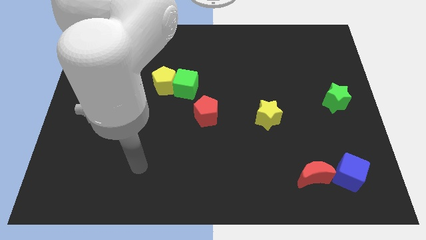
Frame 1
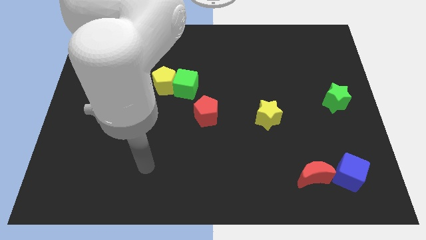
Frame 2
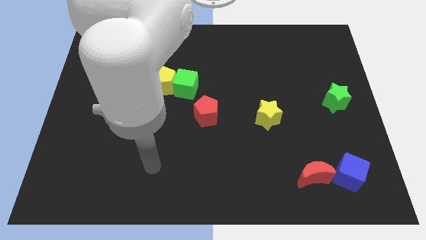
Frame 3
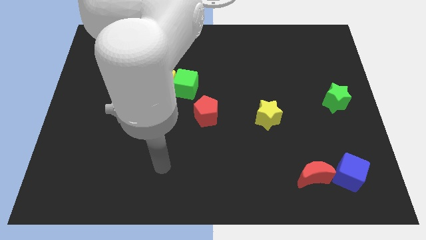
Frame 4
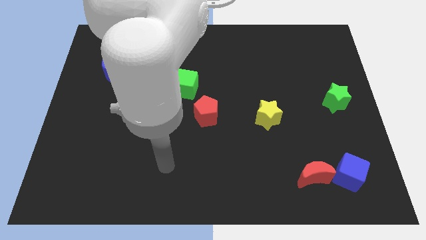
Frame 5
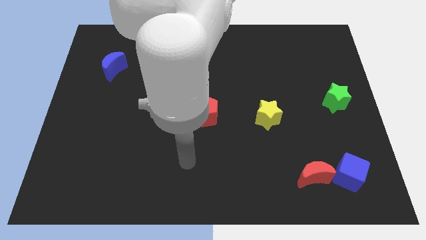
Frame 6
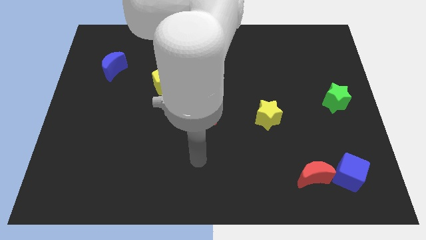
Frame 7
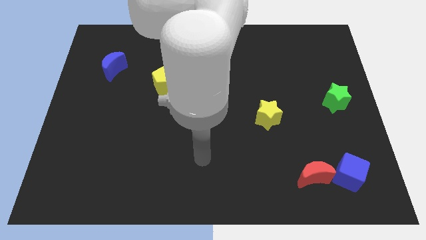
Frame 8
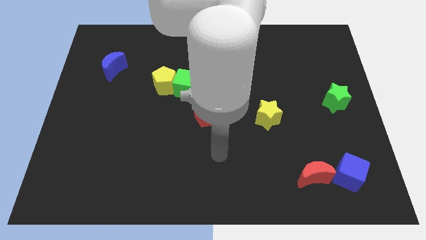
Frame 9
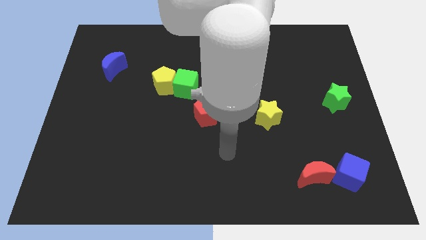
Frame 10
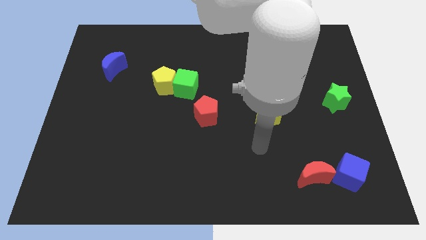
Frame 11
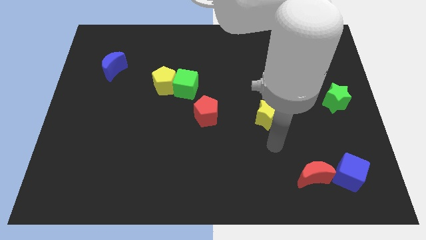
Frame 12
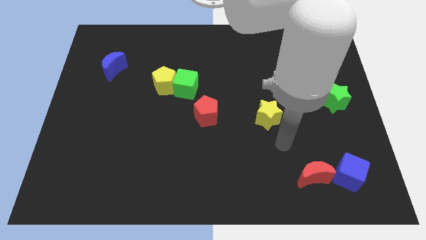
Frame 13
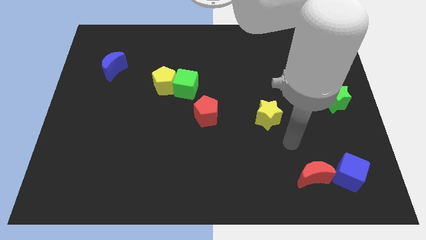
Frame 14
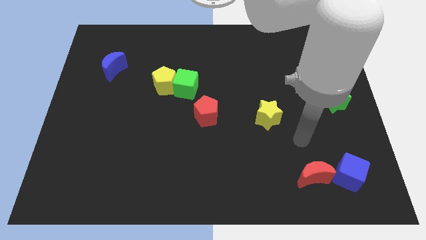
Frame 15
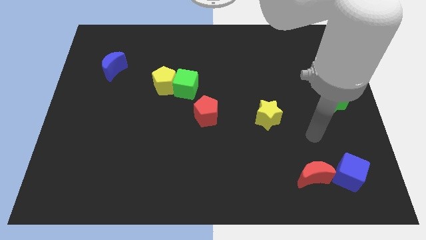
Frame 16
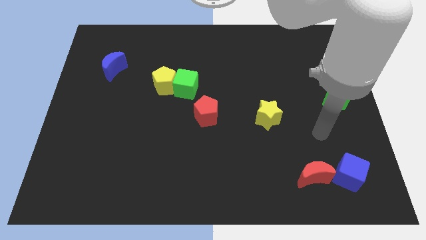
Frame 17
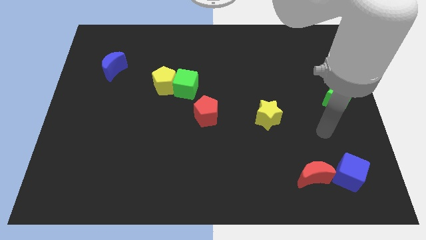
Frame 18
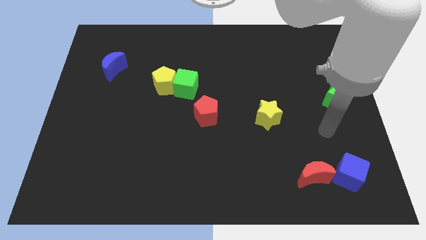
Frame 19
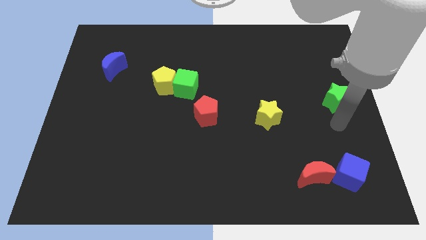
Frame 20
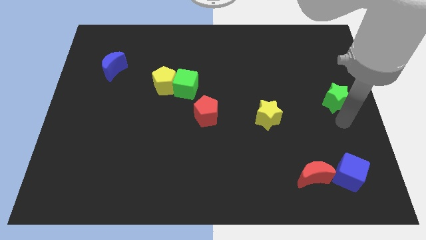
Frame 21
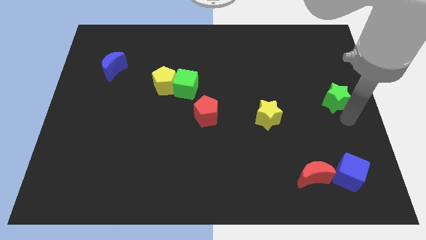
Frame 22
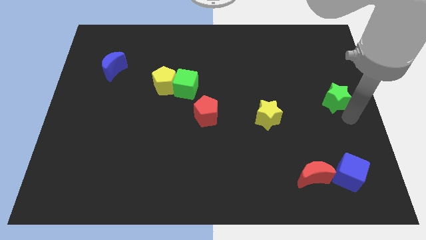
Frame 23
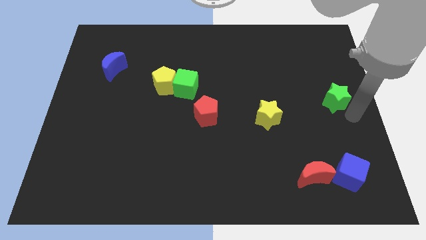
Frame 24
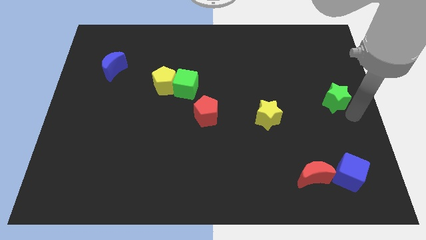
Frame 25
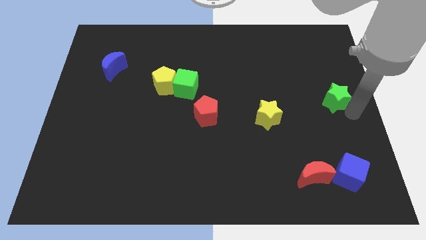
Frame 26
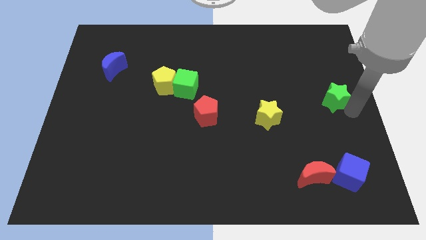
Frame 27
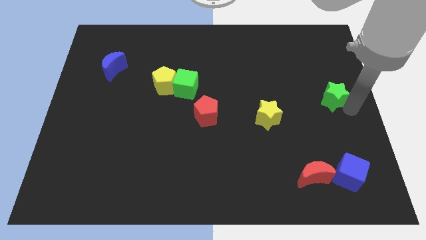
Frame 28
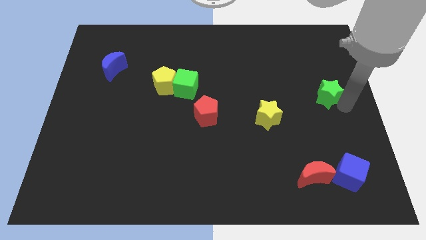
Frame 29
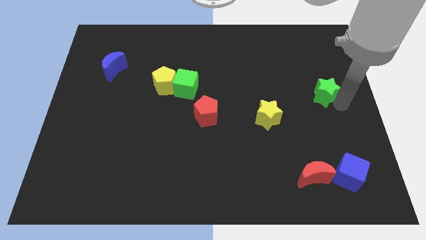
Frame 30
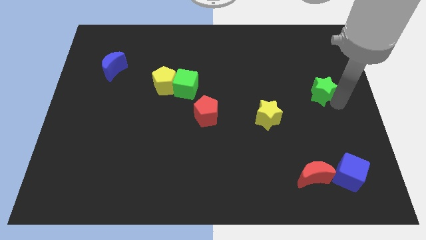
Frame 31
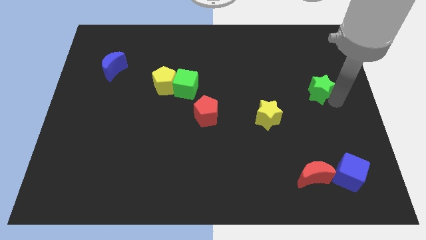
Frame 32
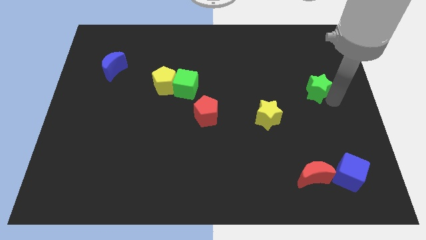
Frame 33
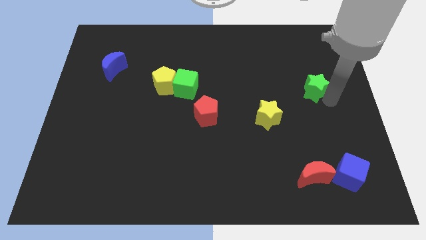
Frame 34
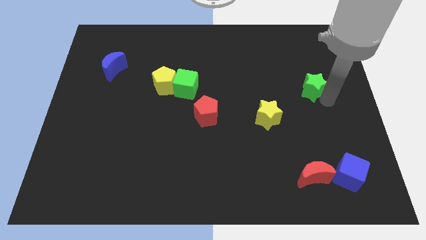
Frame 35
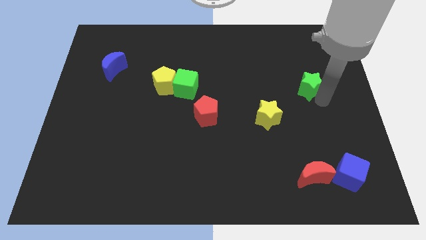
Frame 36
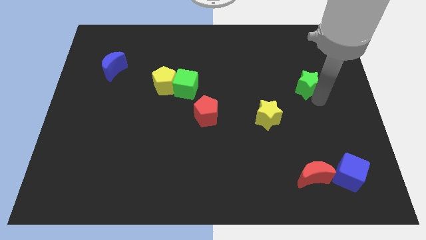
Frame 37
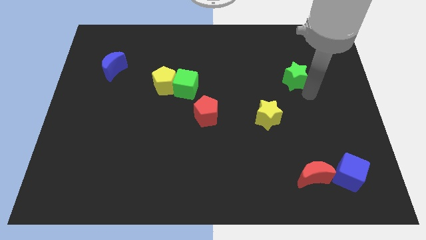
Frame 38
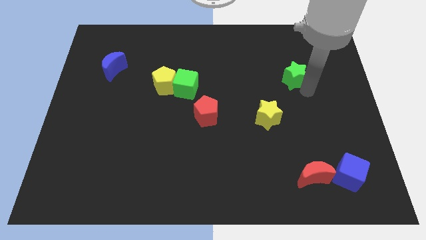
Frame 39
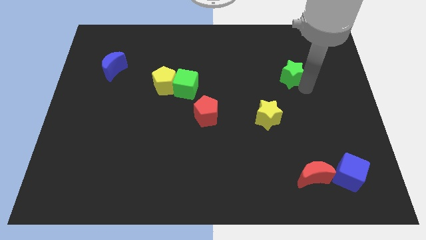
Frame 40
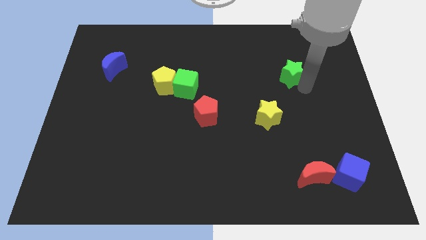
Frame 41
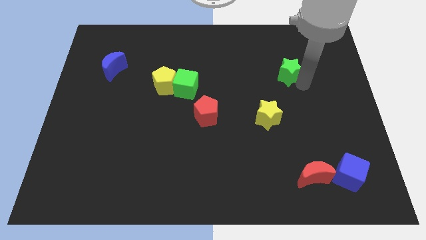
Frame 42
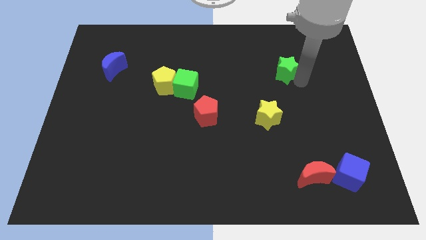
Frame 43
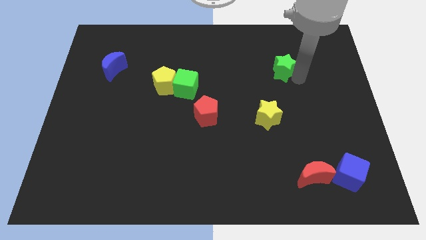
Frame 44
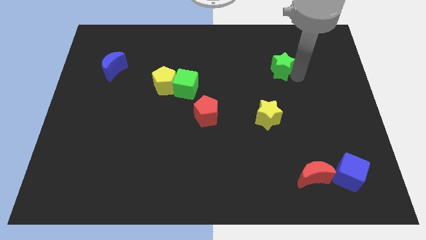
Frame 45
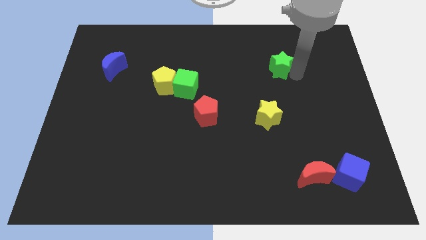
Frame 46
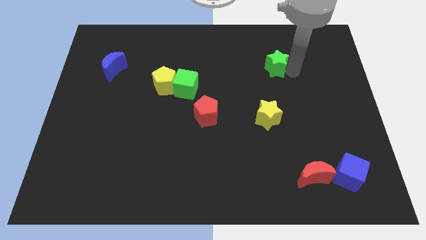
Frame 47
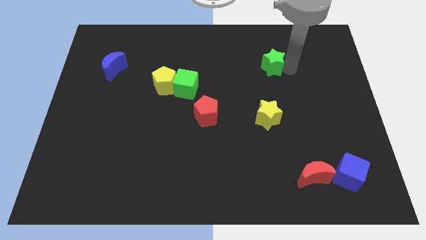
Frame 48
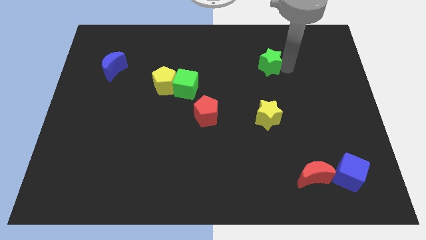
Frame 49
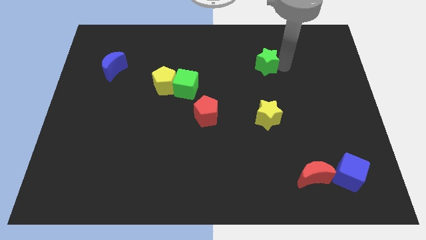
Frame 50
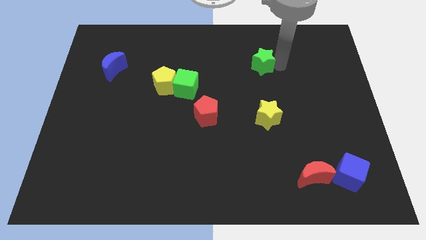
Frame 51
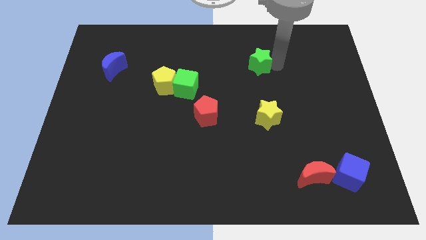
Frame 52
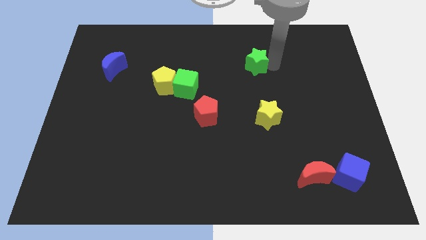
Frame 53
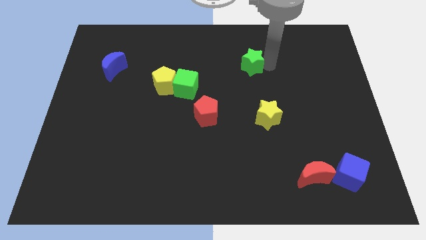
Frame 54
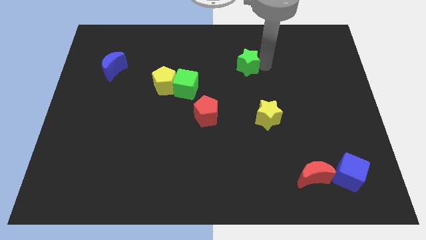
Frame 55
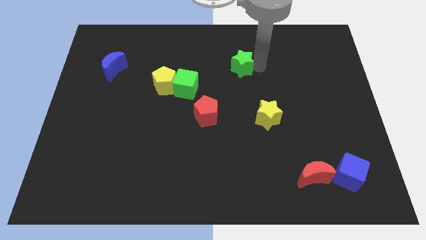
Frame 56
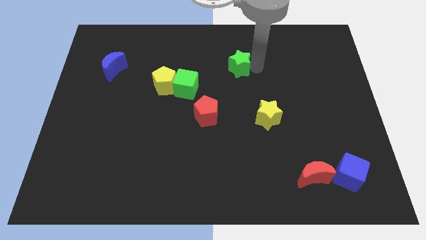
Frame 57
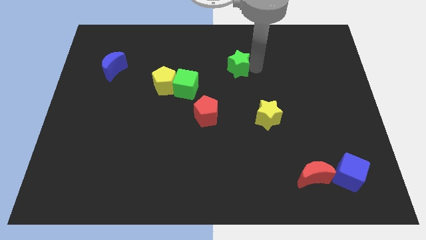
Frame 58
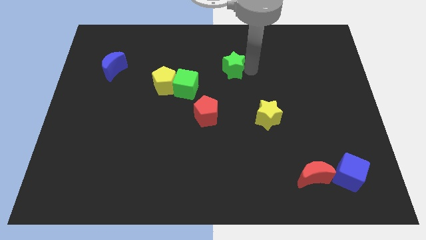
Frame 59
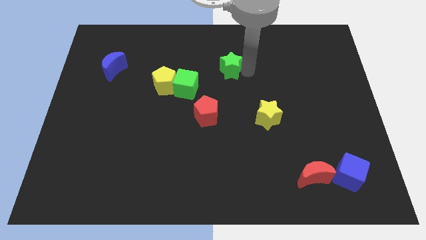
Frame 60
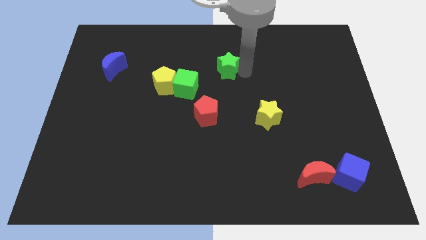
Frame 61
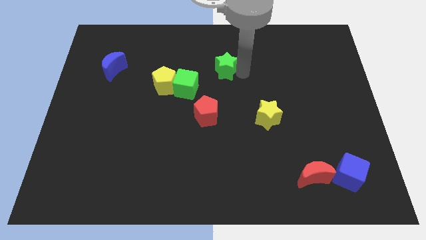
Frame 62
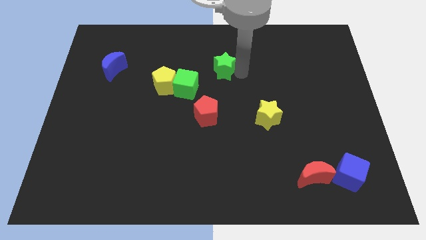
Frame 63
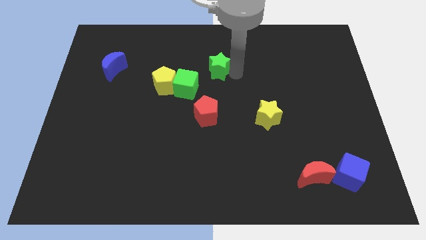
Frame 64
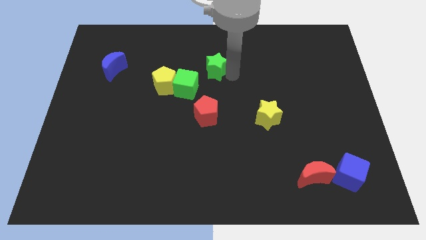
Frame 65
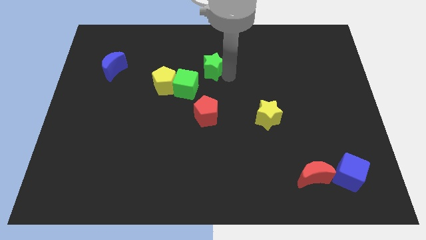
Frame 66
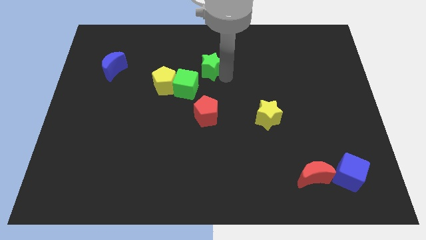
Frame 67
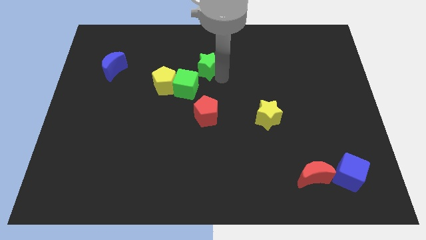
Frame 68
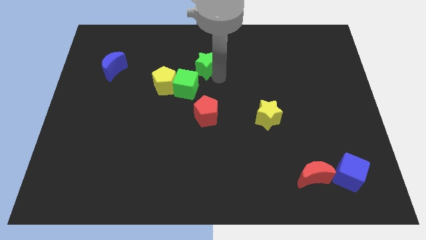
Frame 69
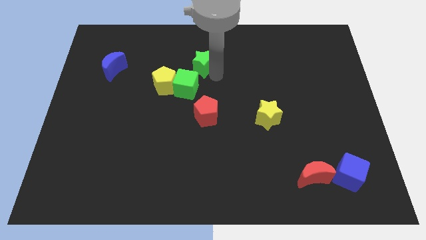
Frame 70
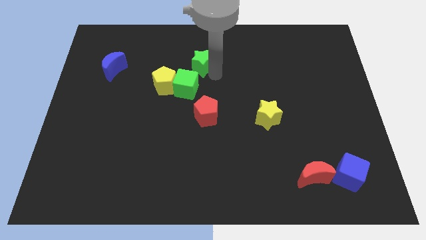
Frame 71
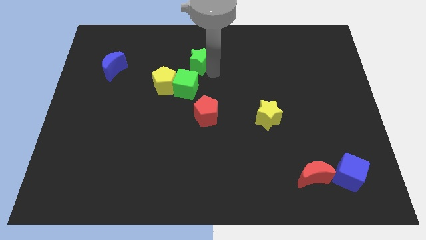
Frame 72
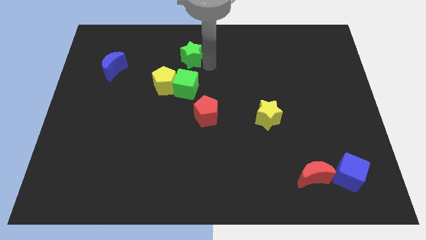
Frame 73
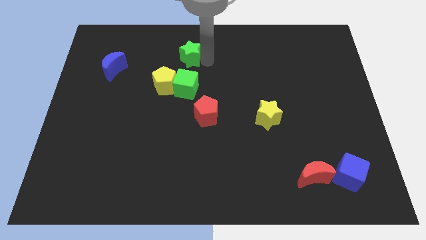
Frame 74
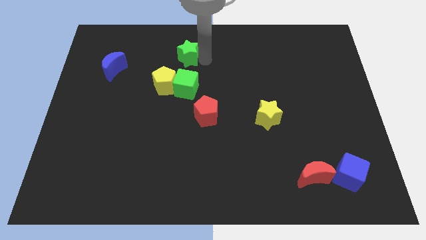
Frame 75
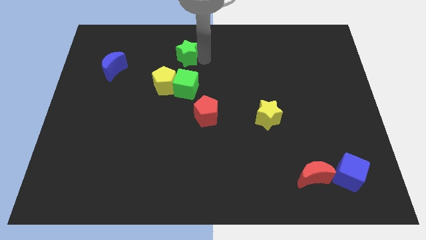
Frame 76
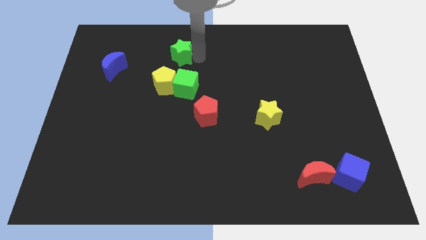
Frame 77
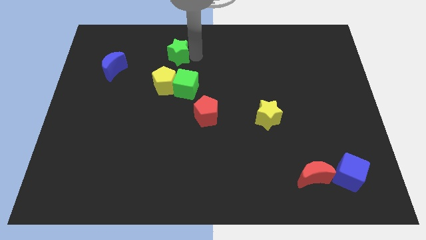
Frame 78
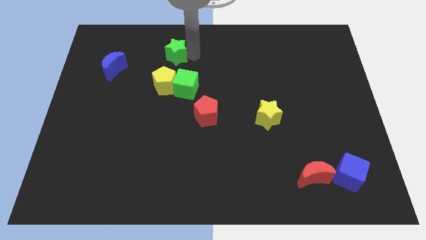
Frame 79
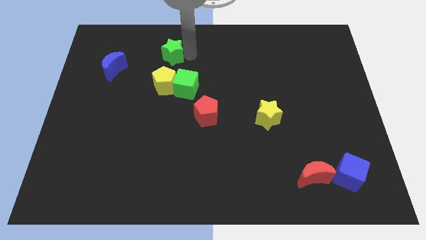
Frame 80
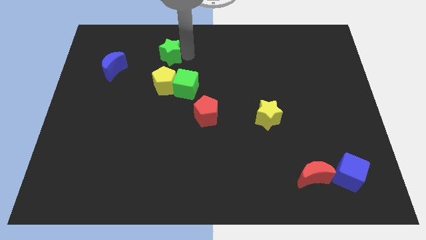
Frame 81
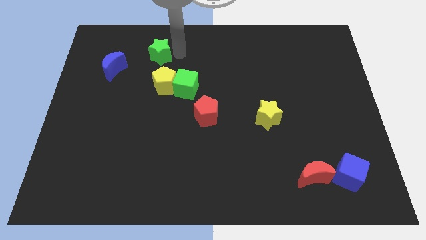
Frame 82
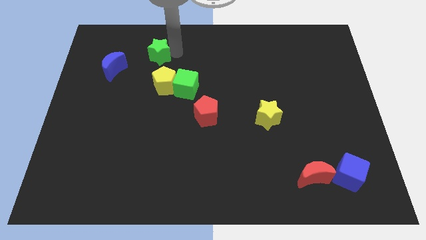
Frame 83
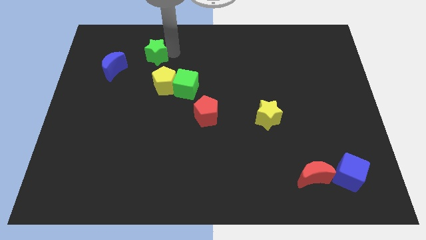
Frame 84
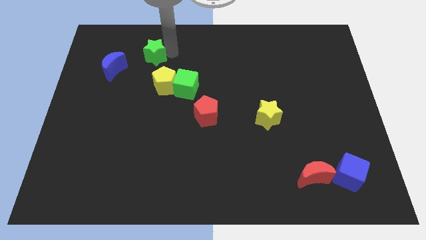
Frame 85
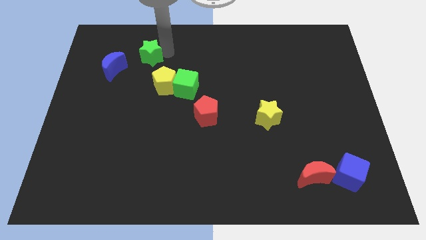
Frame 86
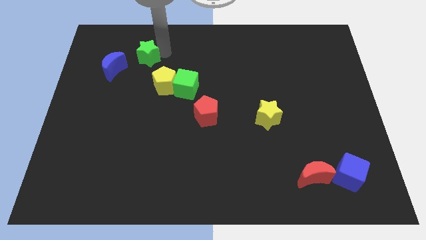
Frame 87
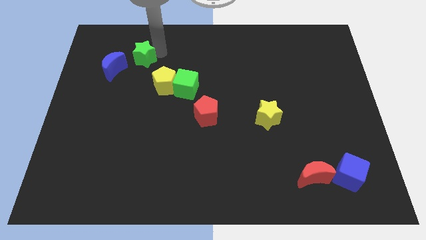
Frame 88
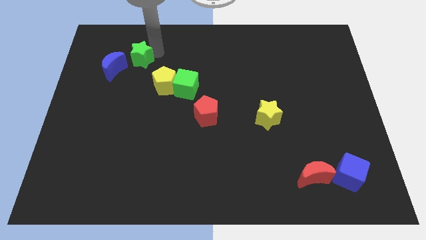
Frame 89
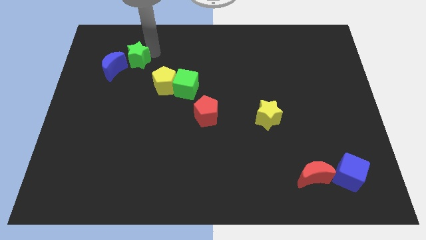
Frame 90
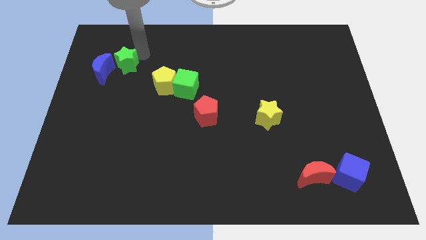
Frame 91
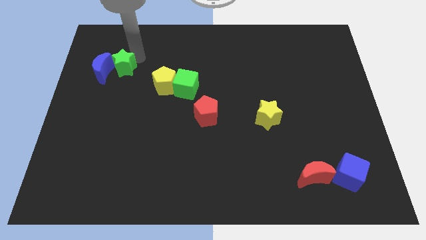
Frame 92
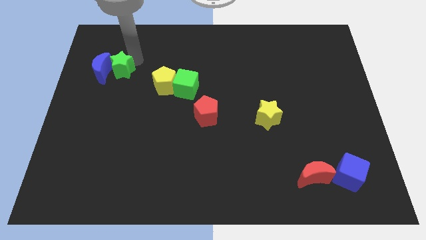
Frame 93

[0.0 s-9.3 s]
put the green star to the blue moon
